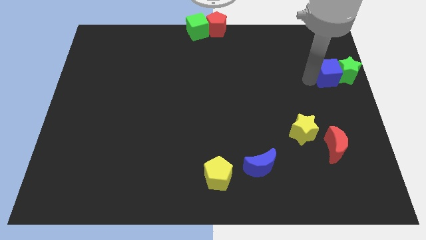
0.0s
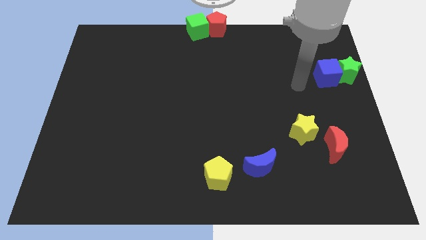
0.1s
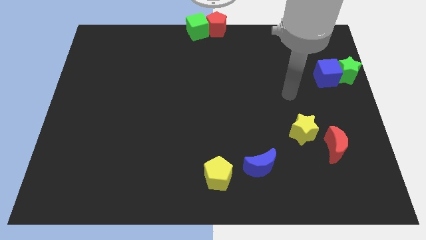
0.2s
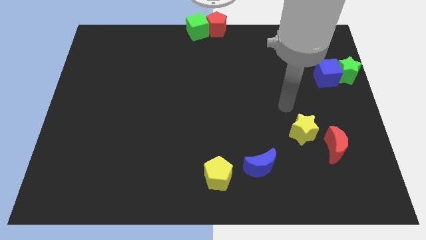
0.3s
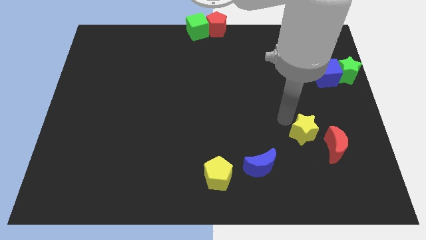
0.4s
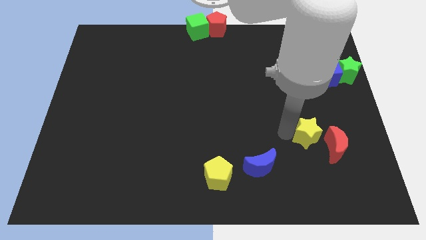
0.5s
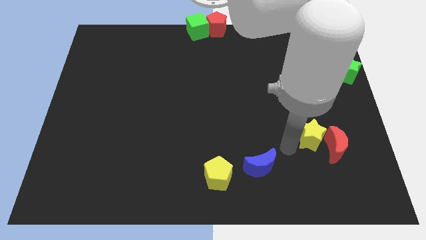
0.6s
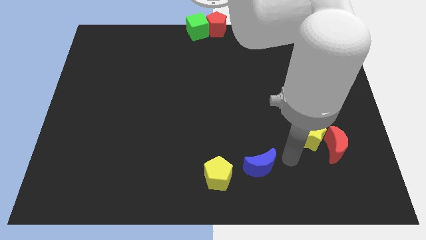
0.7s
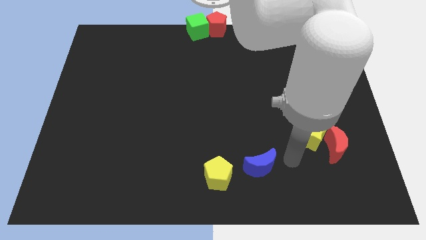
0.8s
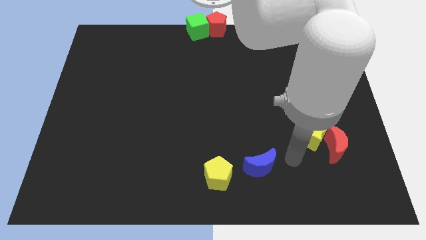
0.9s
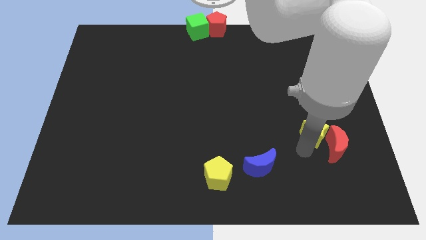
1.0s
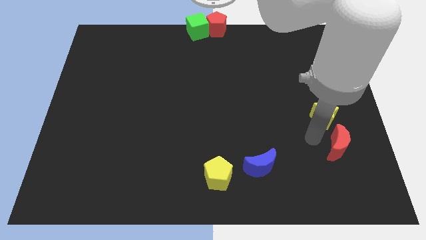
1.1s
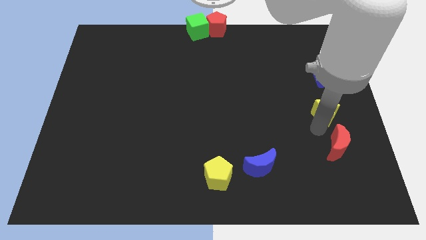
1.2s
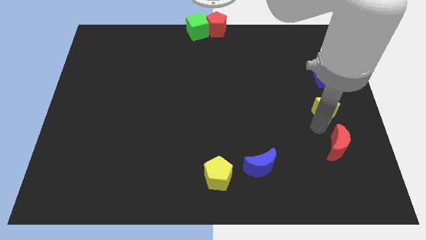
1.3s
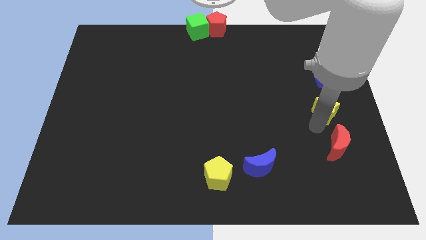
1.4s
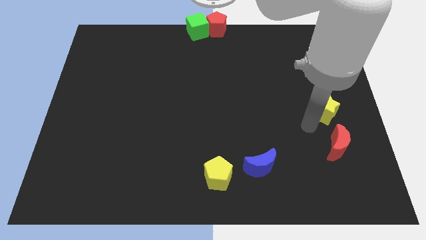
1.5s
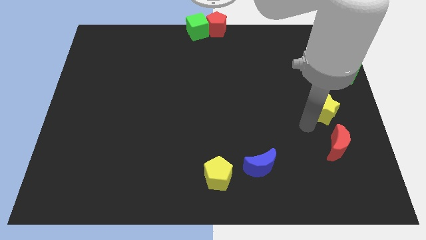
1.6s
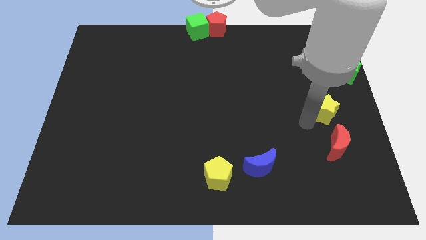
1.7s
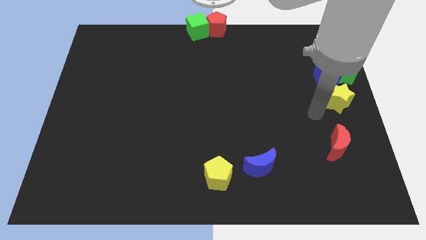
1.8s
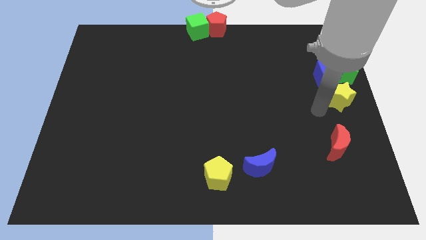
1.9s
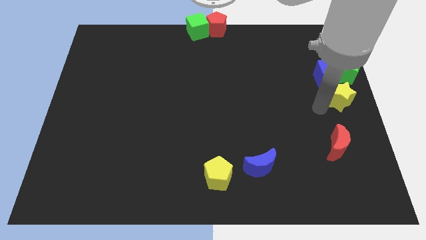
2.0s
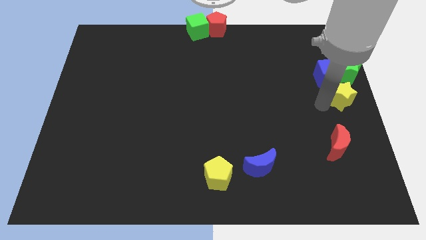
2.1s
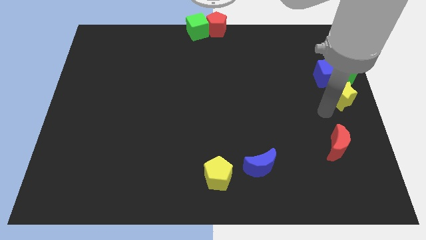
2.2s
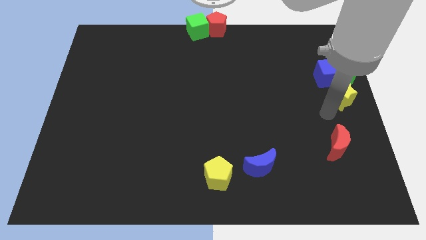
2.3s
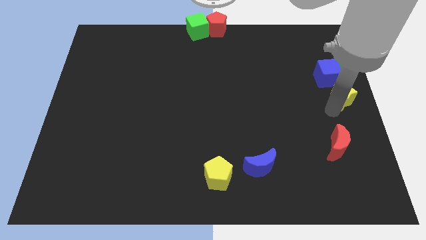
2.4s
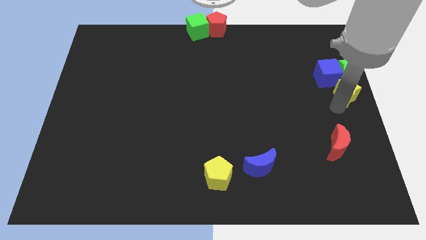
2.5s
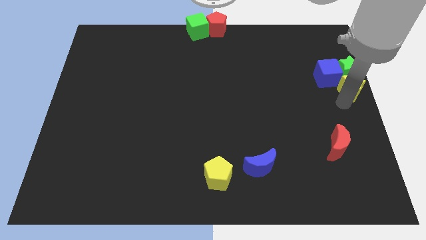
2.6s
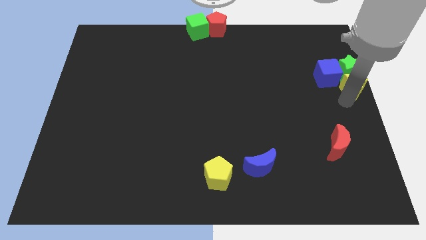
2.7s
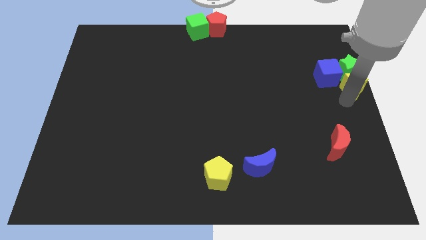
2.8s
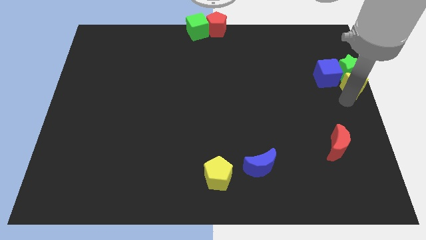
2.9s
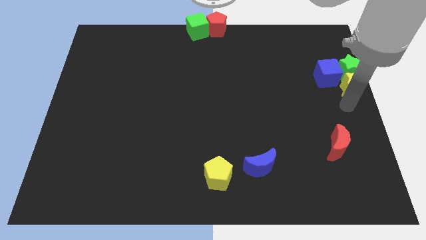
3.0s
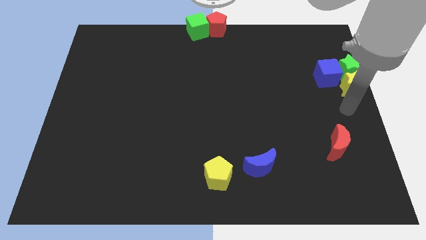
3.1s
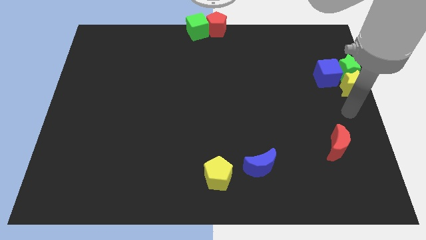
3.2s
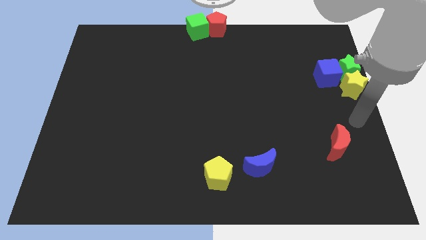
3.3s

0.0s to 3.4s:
move yellow star into green star

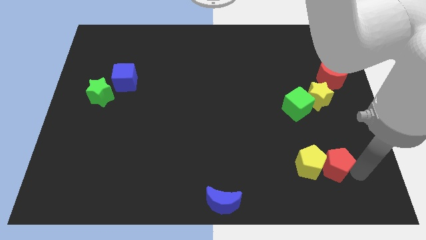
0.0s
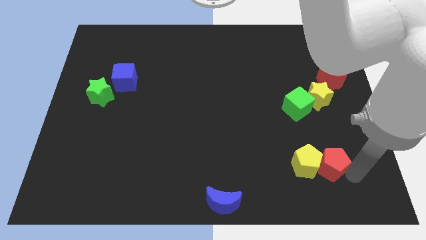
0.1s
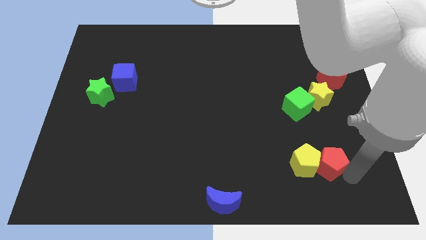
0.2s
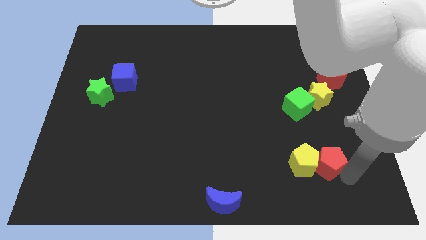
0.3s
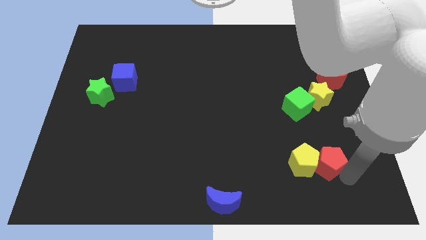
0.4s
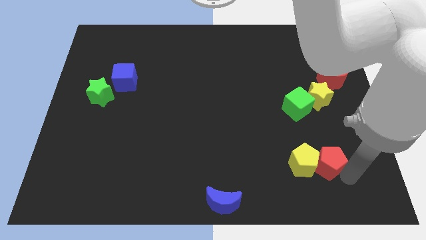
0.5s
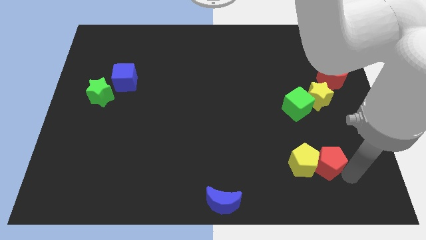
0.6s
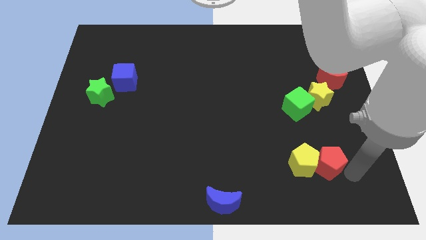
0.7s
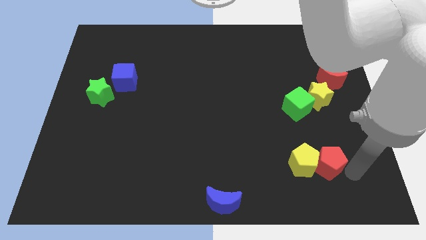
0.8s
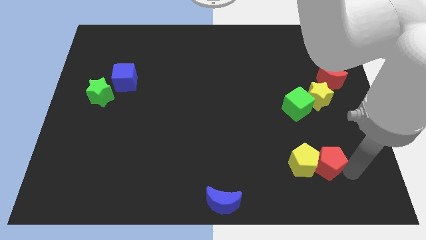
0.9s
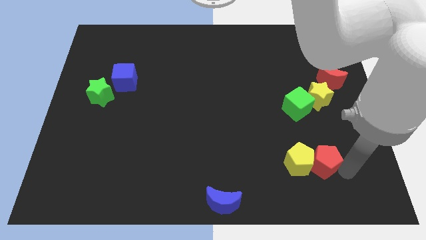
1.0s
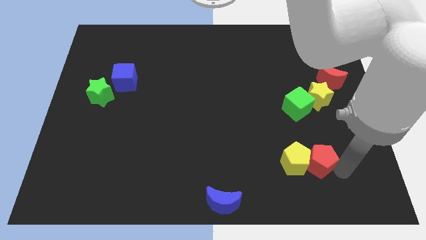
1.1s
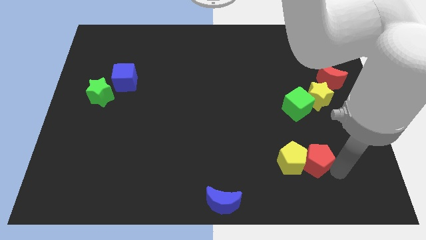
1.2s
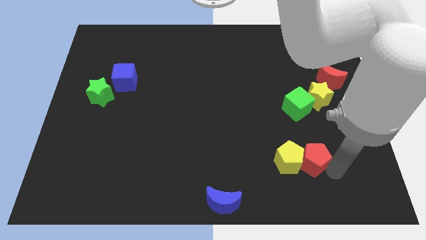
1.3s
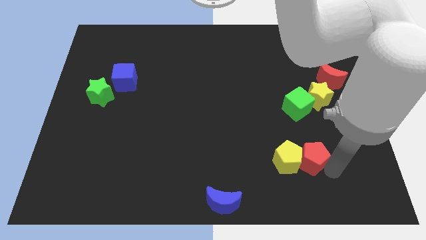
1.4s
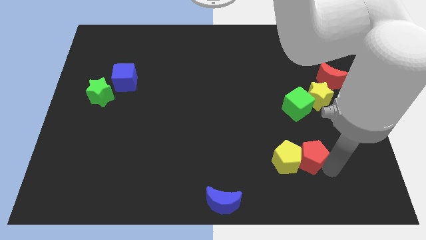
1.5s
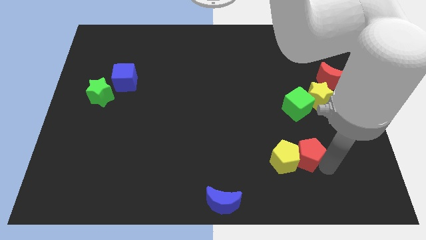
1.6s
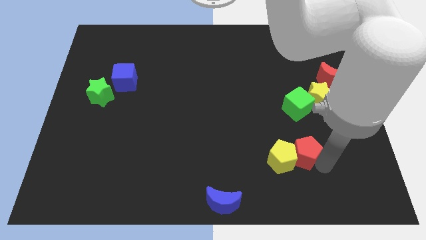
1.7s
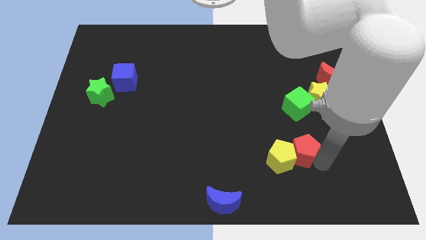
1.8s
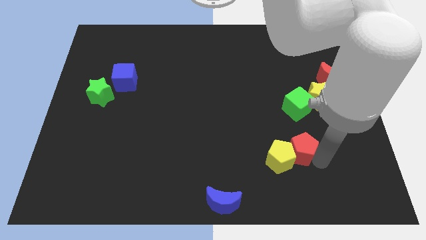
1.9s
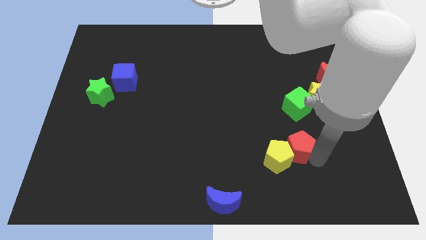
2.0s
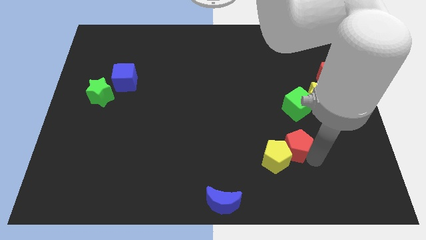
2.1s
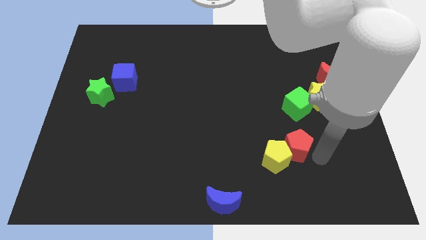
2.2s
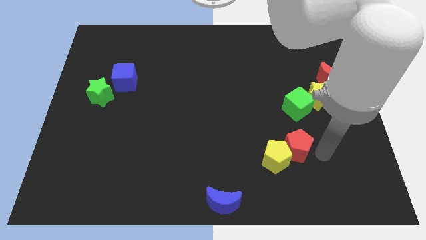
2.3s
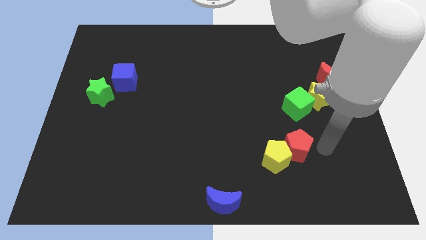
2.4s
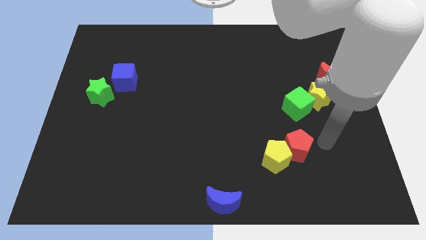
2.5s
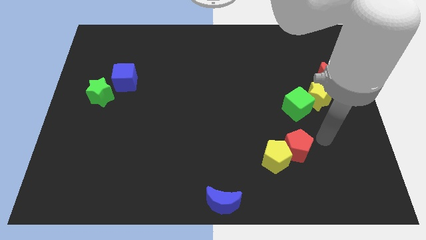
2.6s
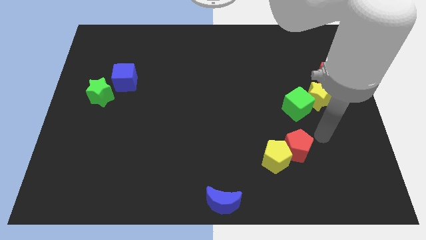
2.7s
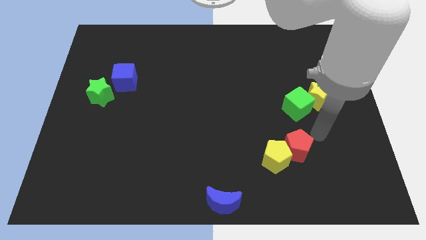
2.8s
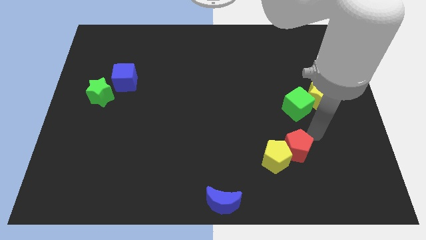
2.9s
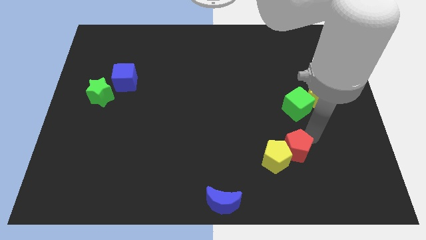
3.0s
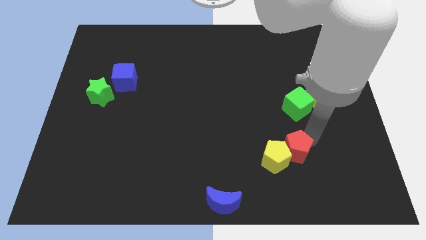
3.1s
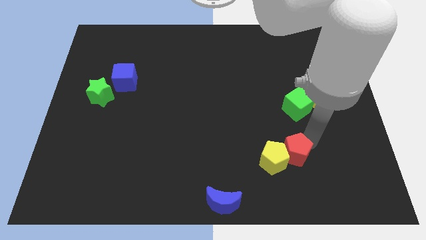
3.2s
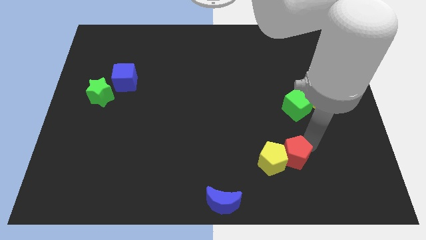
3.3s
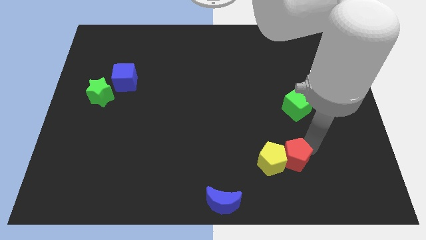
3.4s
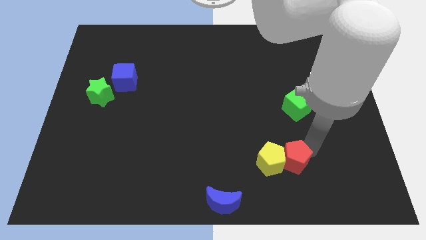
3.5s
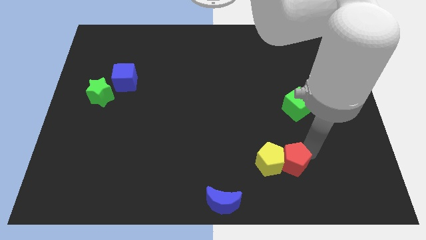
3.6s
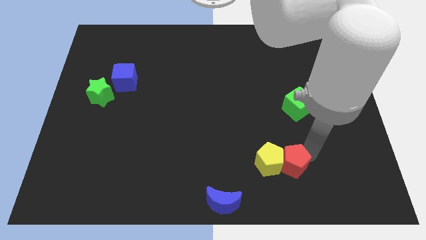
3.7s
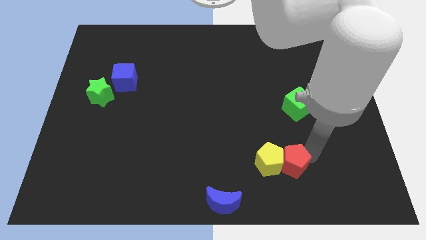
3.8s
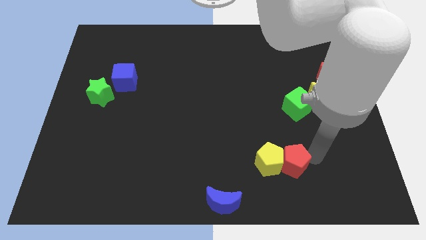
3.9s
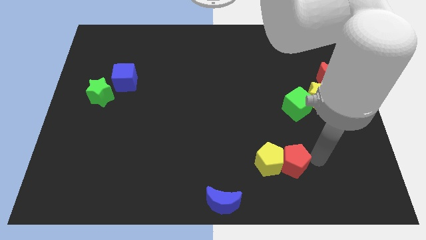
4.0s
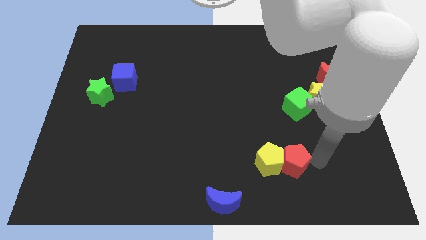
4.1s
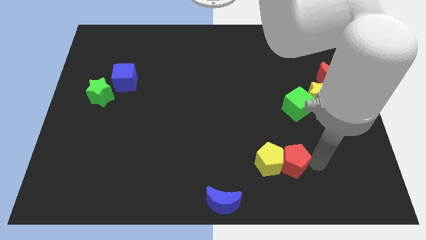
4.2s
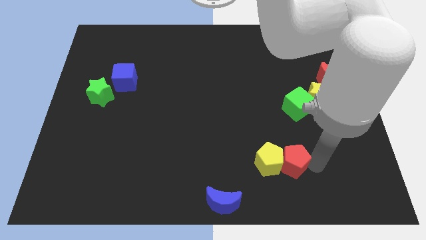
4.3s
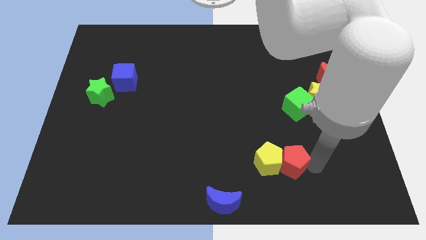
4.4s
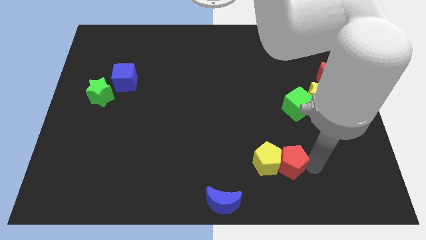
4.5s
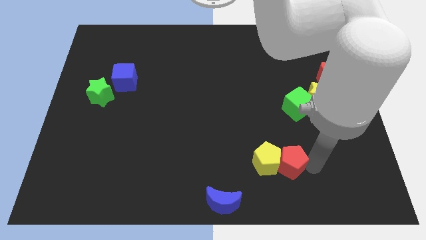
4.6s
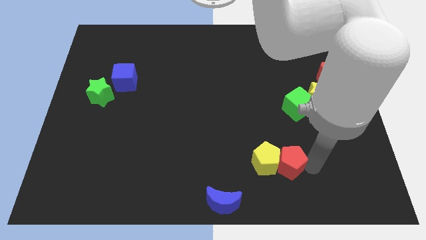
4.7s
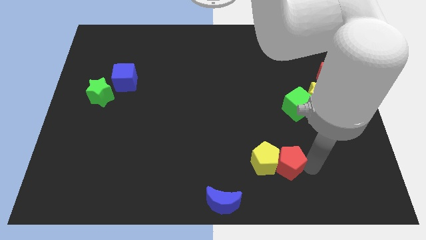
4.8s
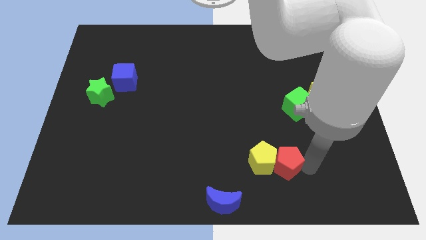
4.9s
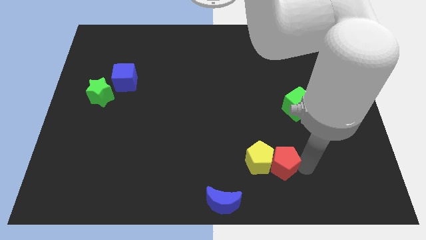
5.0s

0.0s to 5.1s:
push red pentagon along with yellow pentagon towards center

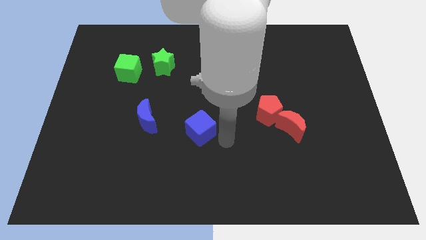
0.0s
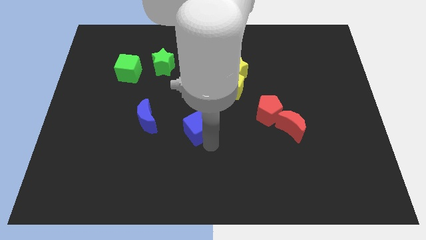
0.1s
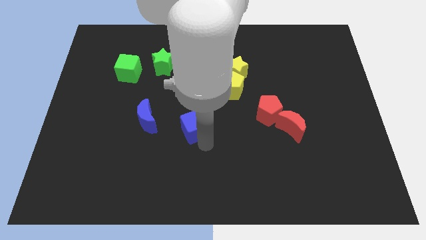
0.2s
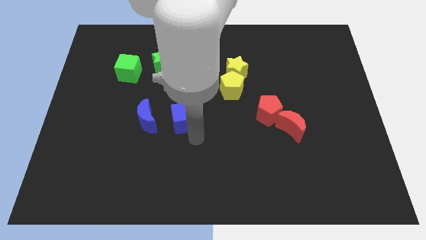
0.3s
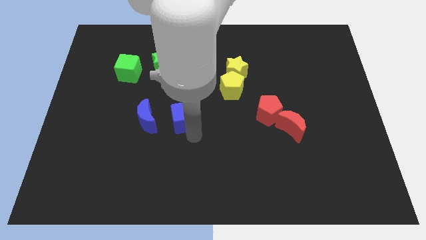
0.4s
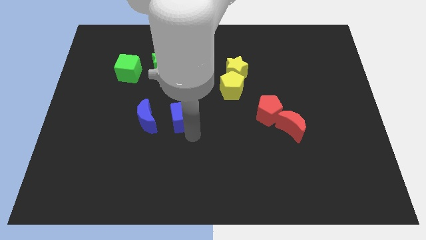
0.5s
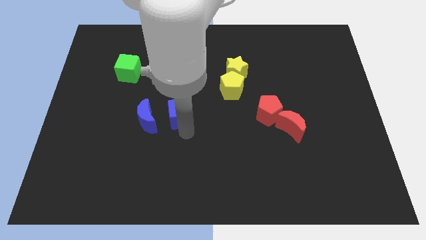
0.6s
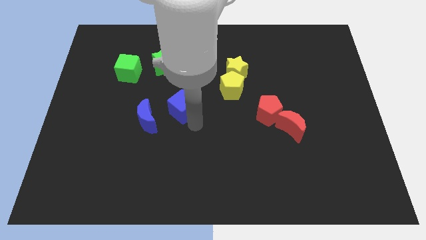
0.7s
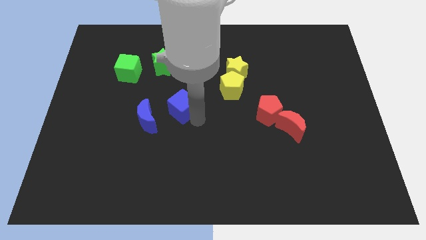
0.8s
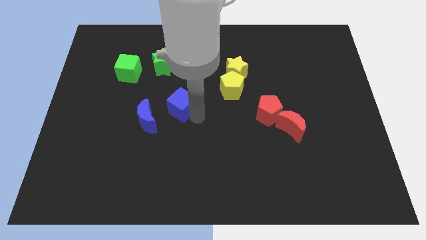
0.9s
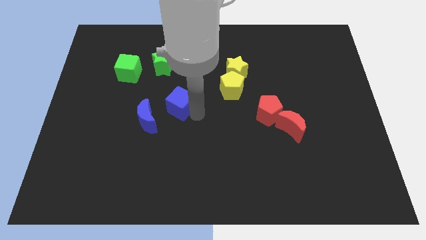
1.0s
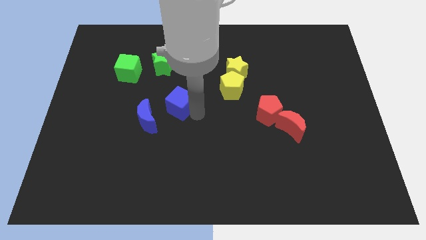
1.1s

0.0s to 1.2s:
place the blue cube below the green star
